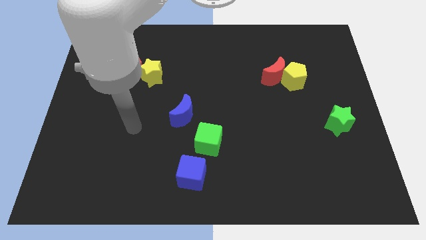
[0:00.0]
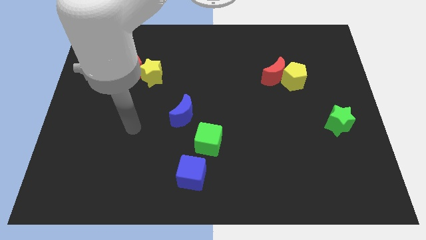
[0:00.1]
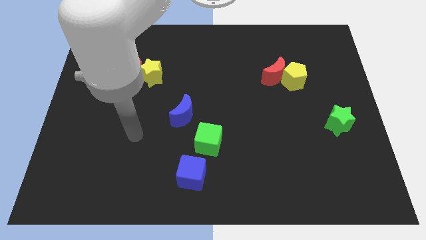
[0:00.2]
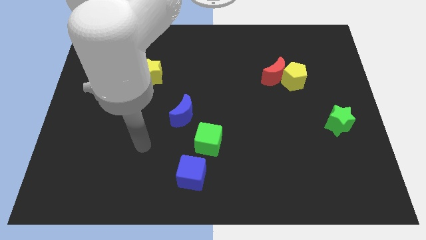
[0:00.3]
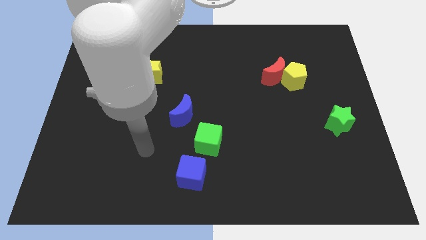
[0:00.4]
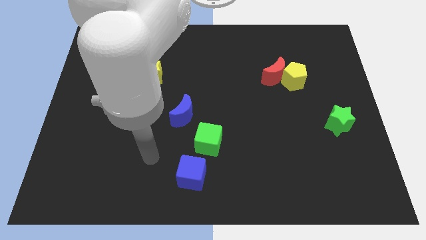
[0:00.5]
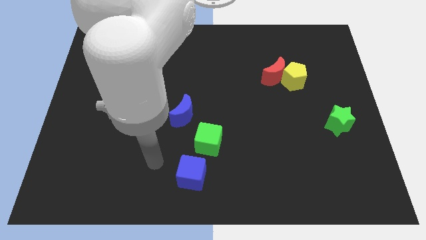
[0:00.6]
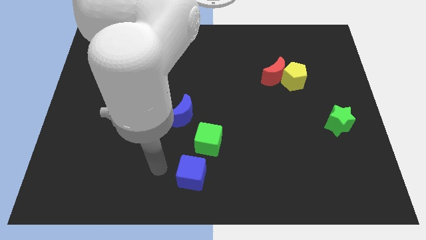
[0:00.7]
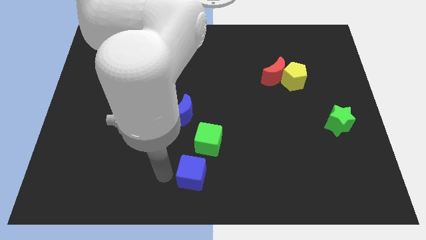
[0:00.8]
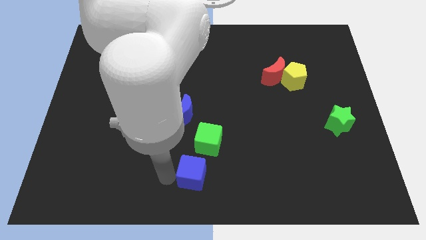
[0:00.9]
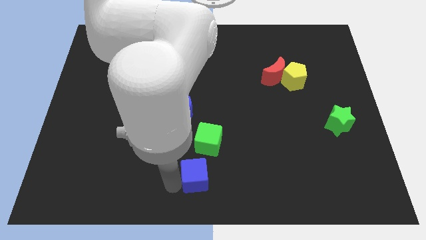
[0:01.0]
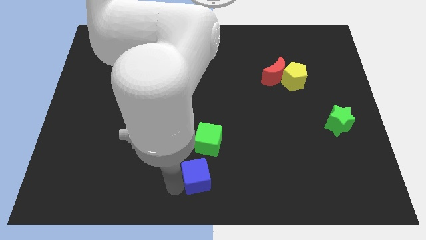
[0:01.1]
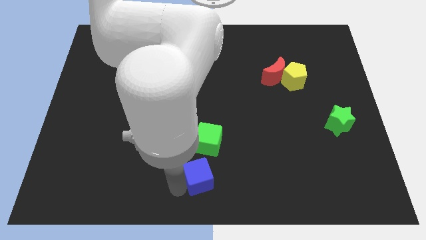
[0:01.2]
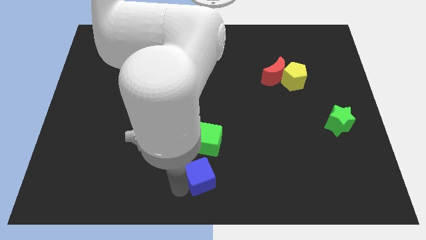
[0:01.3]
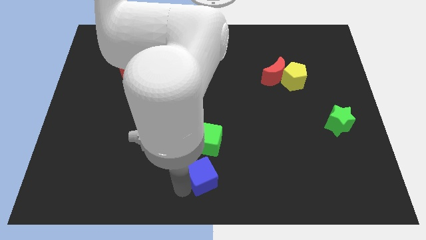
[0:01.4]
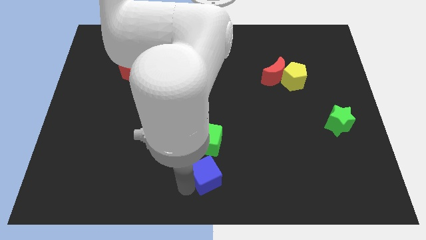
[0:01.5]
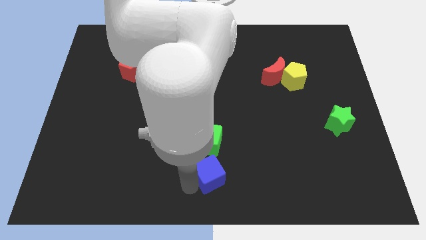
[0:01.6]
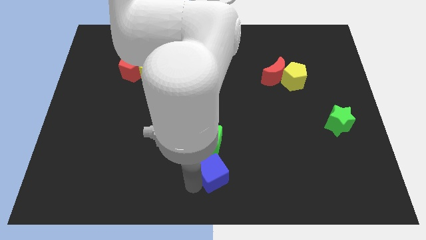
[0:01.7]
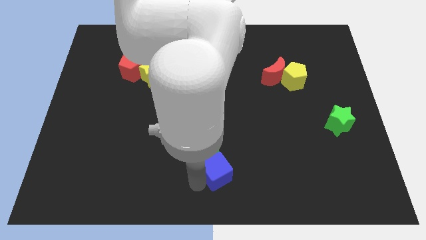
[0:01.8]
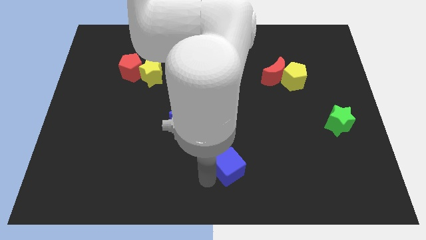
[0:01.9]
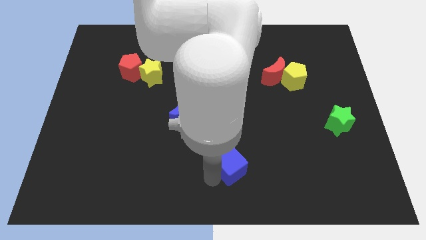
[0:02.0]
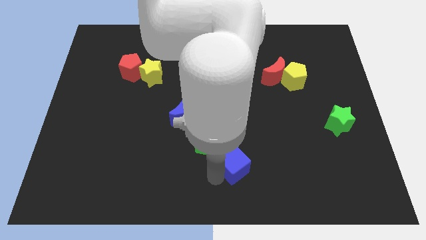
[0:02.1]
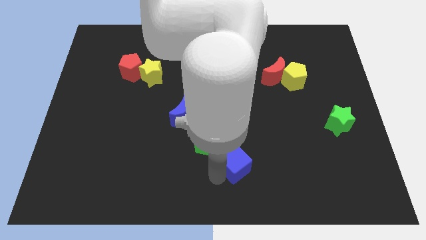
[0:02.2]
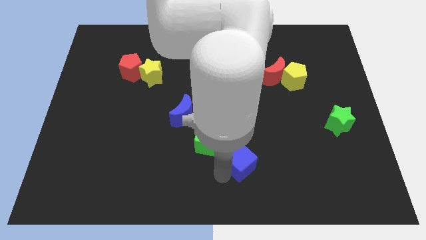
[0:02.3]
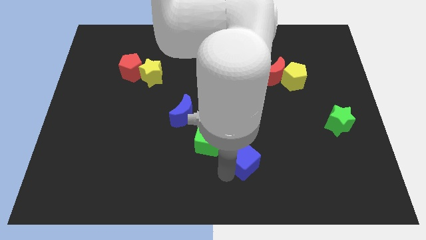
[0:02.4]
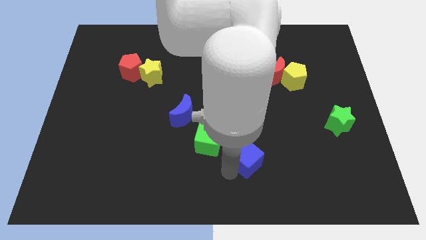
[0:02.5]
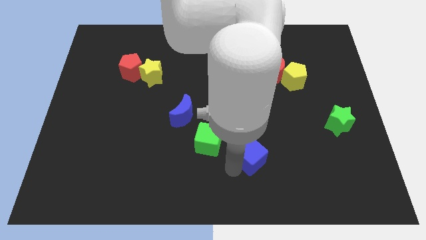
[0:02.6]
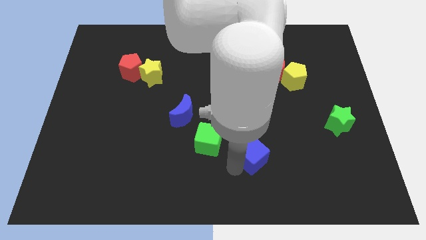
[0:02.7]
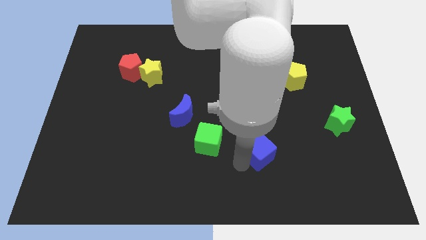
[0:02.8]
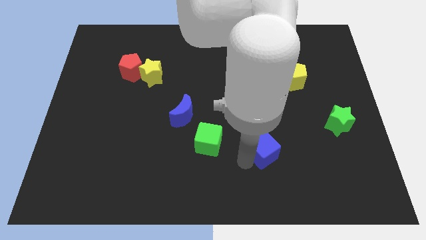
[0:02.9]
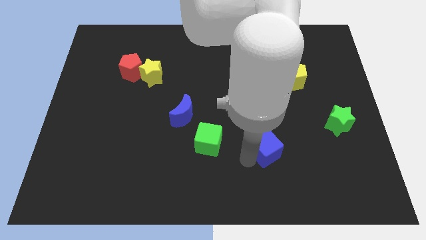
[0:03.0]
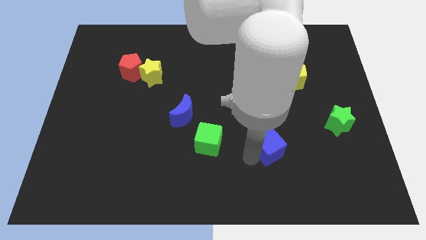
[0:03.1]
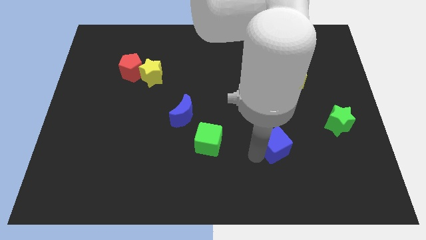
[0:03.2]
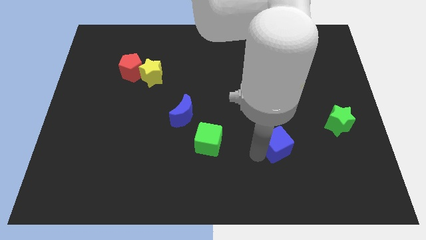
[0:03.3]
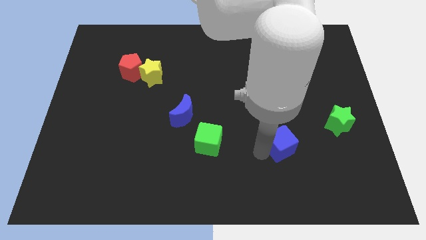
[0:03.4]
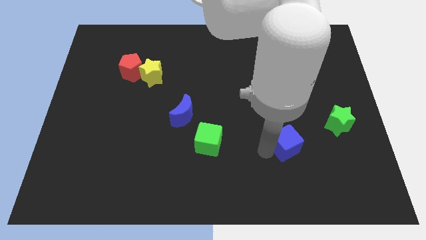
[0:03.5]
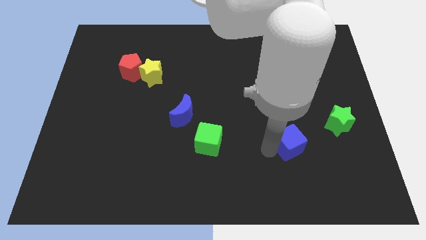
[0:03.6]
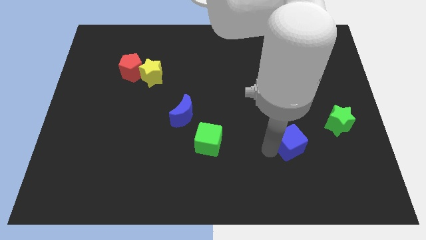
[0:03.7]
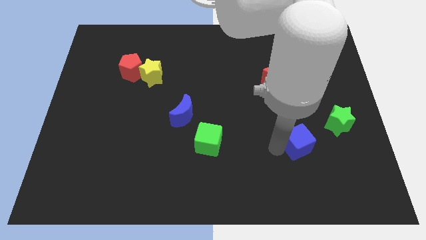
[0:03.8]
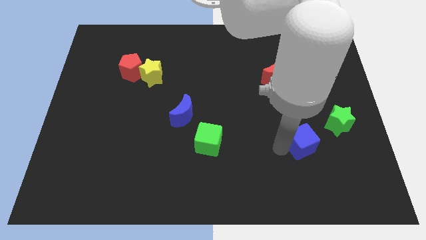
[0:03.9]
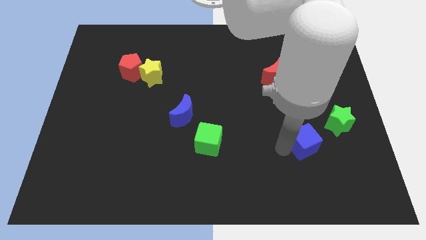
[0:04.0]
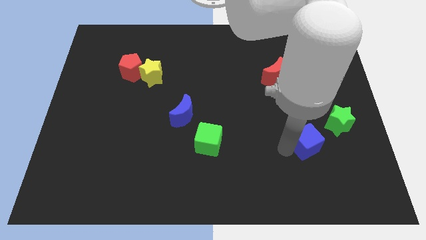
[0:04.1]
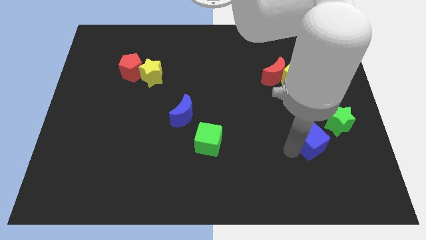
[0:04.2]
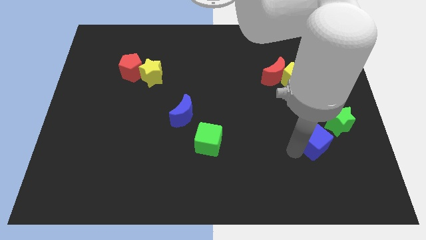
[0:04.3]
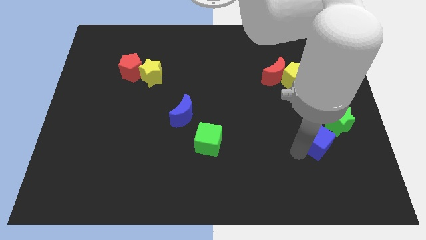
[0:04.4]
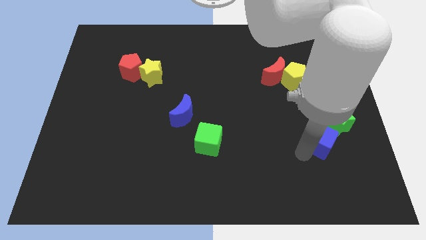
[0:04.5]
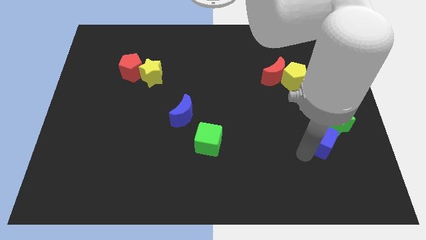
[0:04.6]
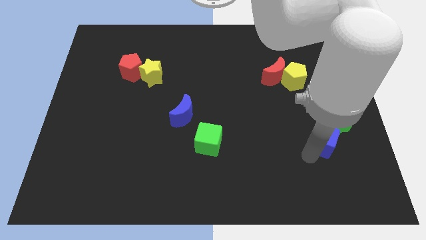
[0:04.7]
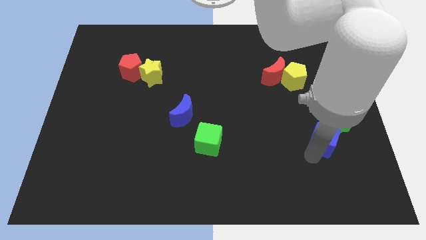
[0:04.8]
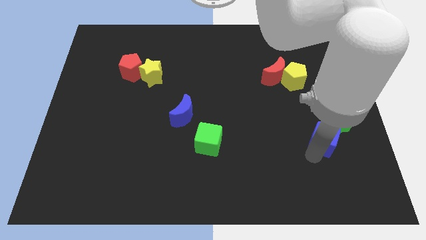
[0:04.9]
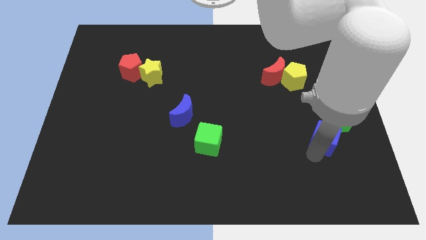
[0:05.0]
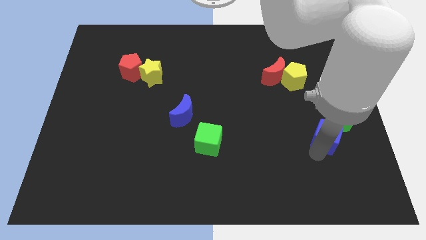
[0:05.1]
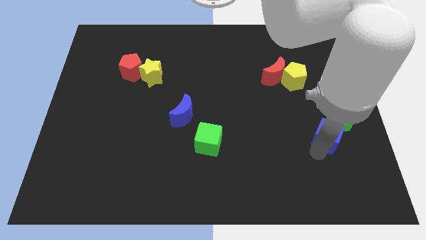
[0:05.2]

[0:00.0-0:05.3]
slide the blue cube towards the green star

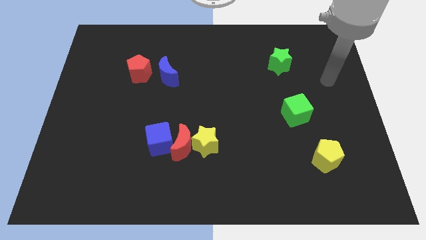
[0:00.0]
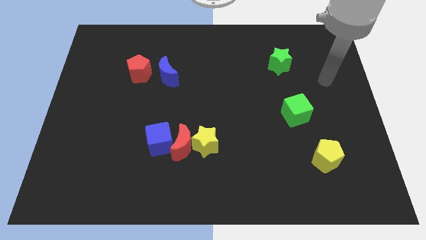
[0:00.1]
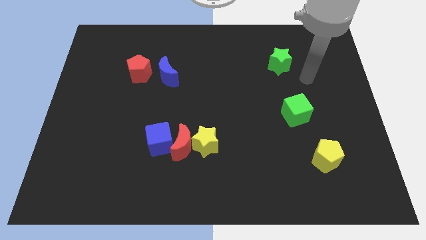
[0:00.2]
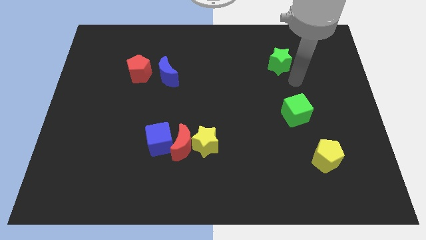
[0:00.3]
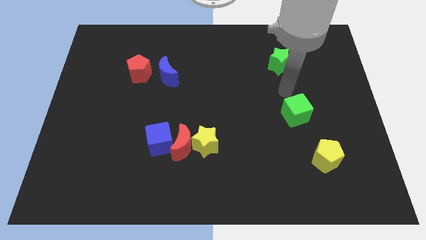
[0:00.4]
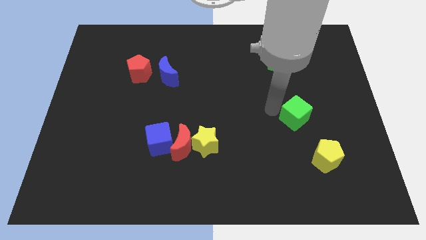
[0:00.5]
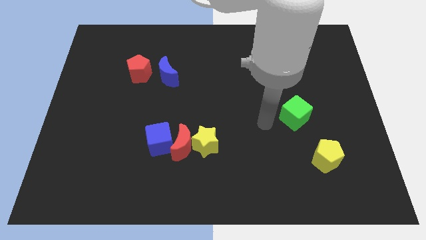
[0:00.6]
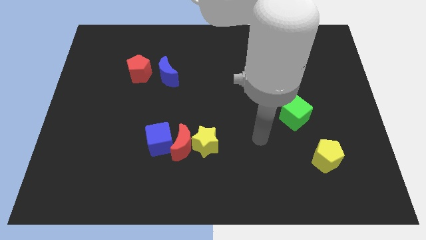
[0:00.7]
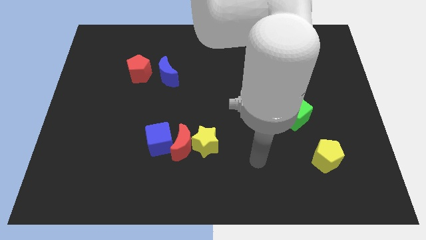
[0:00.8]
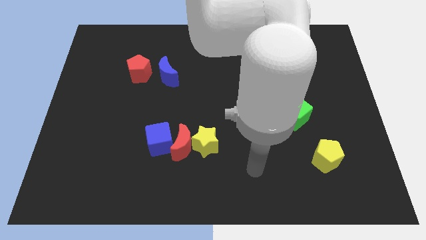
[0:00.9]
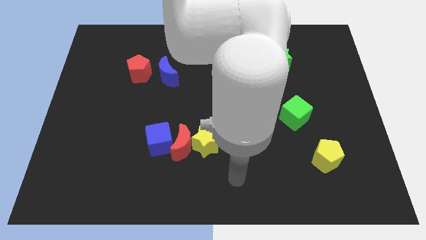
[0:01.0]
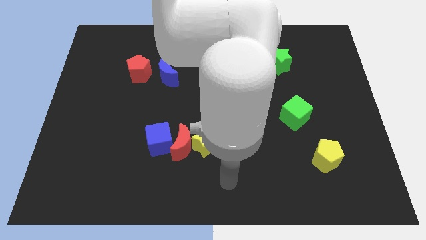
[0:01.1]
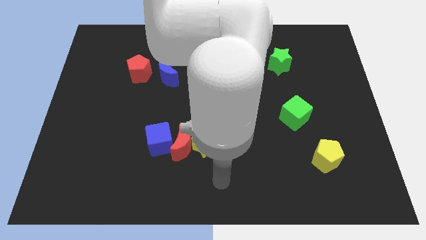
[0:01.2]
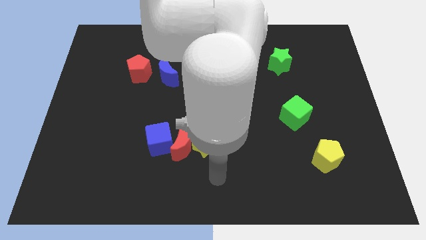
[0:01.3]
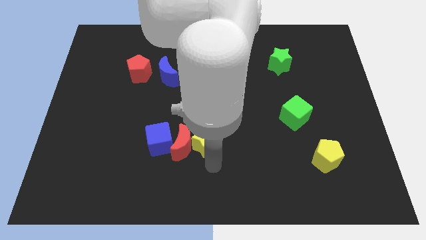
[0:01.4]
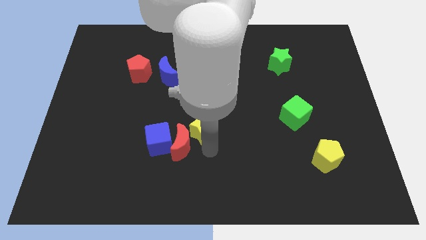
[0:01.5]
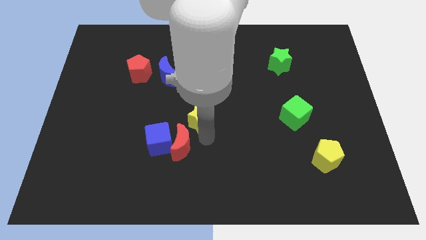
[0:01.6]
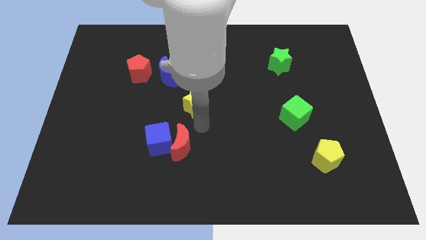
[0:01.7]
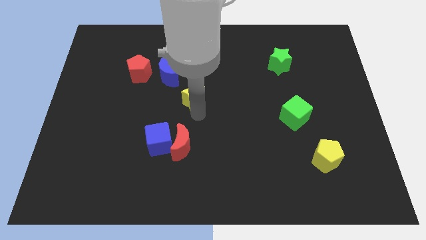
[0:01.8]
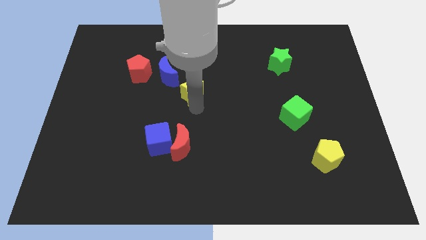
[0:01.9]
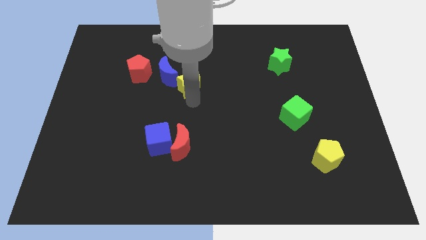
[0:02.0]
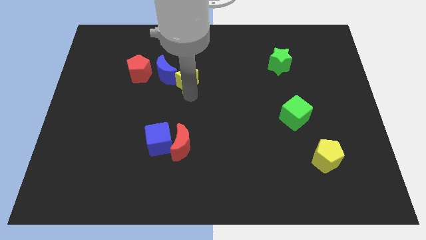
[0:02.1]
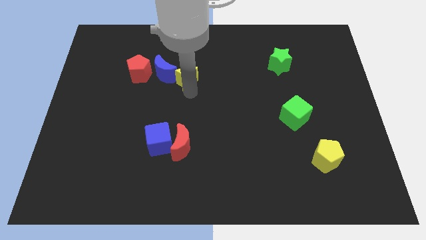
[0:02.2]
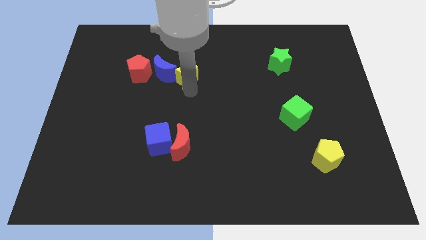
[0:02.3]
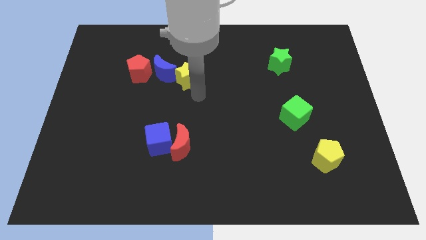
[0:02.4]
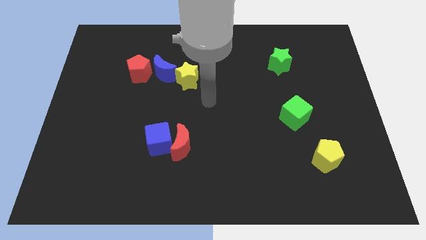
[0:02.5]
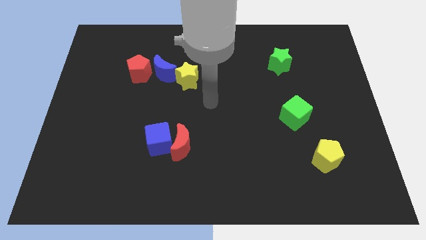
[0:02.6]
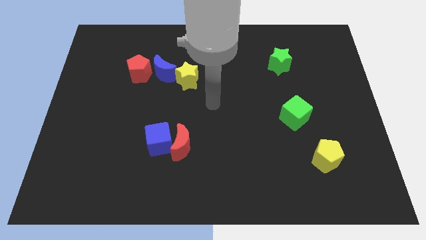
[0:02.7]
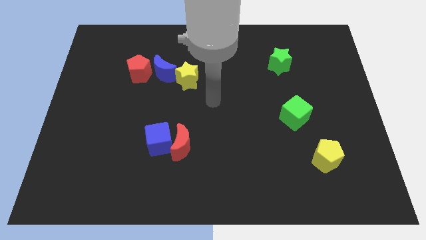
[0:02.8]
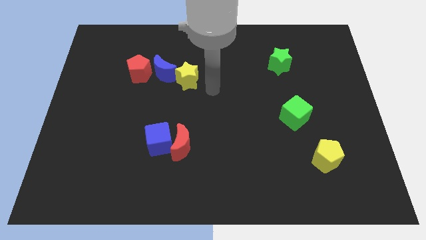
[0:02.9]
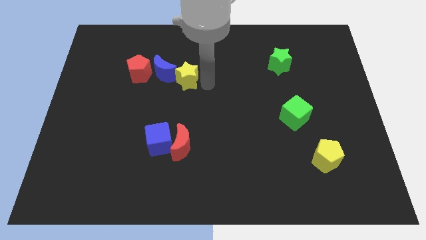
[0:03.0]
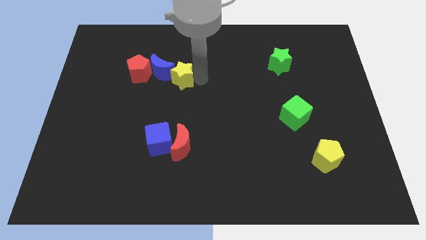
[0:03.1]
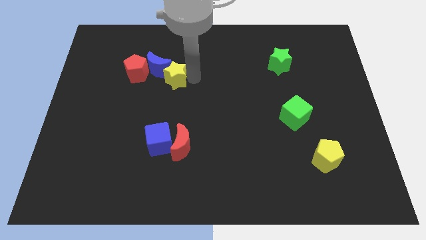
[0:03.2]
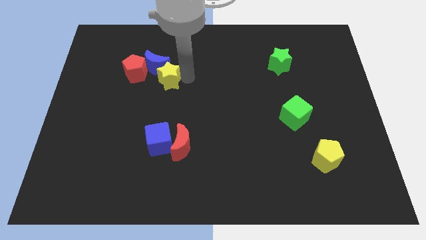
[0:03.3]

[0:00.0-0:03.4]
push the yellow star close to the blue moon
